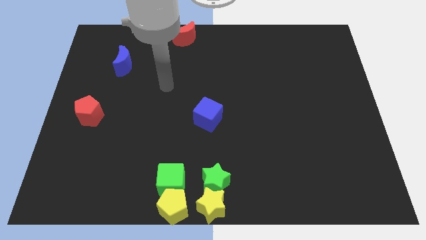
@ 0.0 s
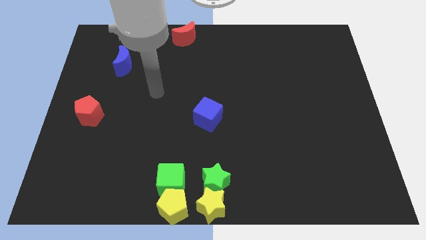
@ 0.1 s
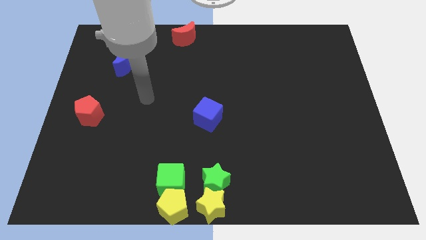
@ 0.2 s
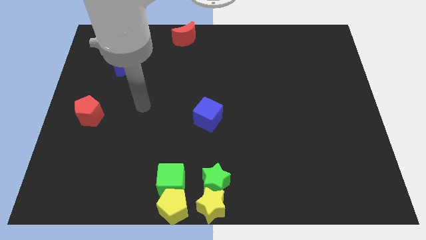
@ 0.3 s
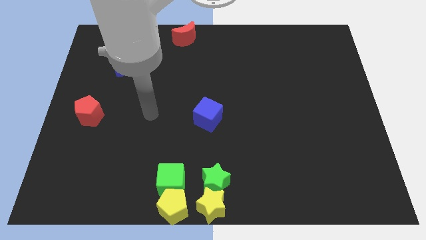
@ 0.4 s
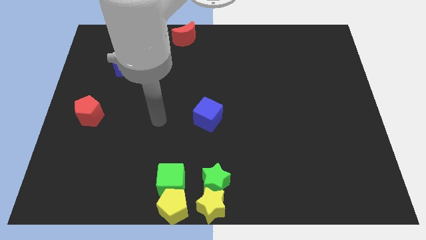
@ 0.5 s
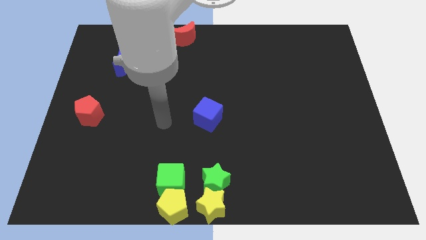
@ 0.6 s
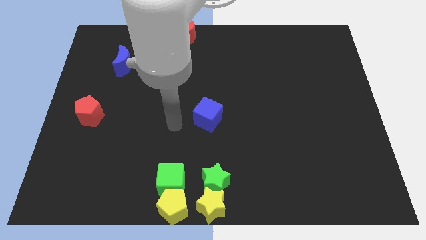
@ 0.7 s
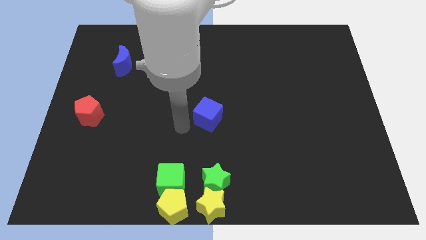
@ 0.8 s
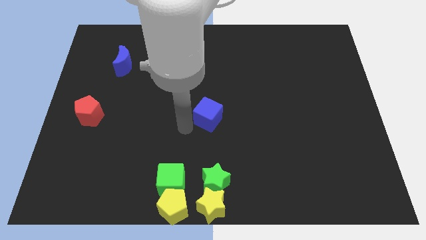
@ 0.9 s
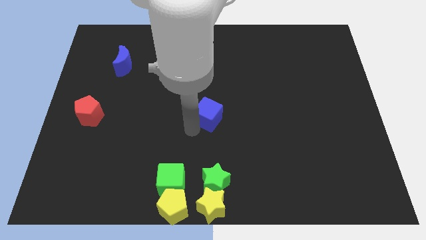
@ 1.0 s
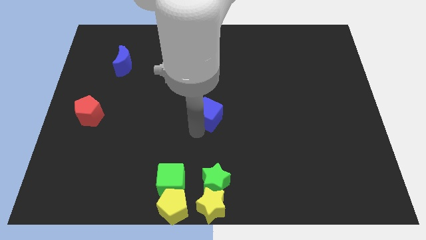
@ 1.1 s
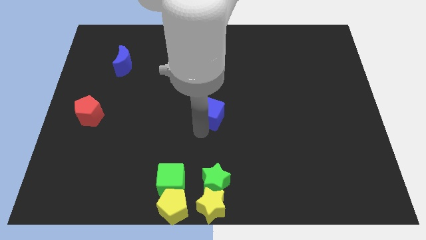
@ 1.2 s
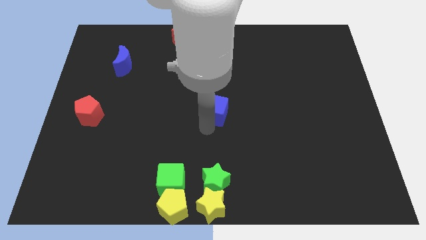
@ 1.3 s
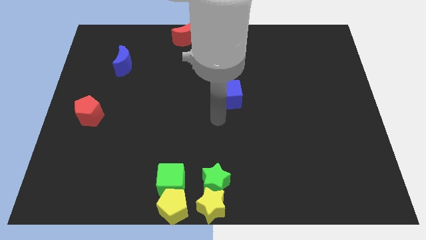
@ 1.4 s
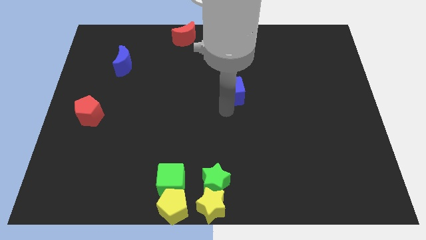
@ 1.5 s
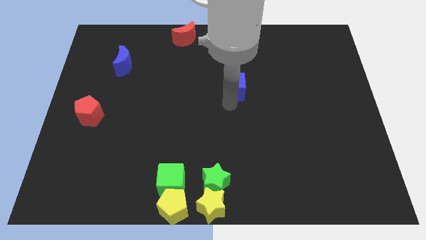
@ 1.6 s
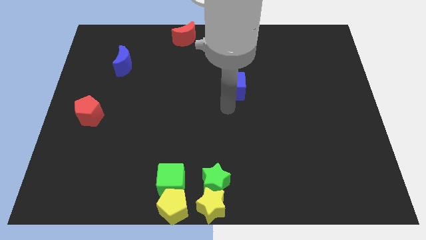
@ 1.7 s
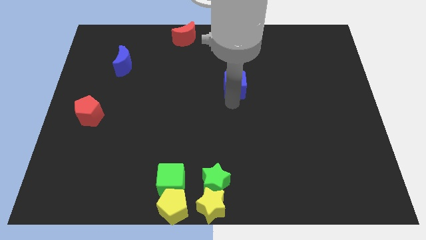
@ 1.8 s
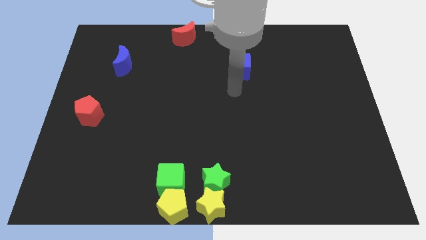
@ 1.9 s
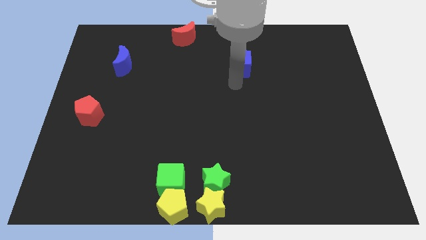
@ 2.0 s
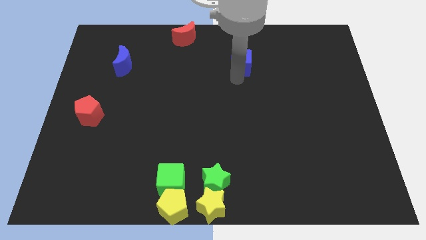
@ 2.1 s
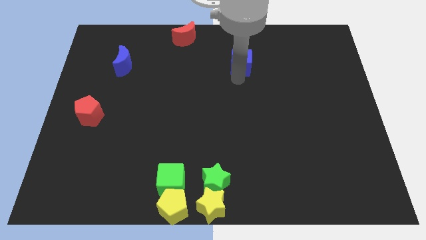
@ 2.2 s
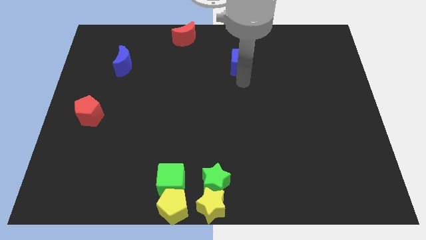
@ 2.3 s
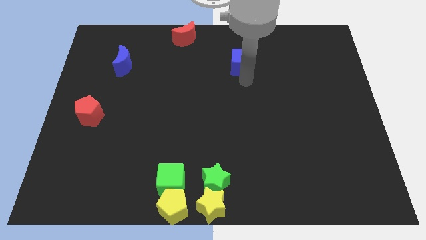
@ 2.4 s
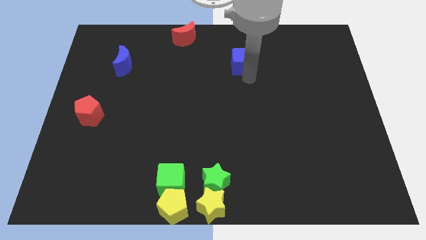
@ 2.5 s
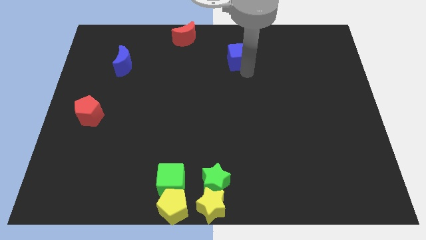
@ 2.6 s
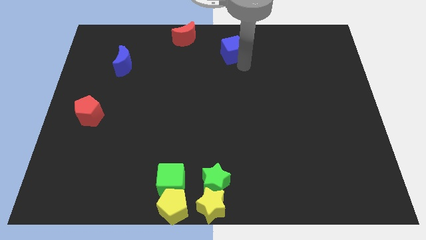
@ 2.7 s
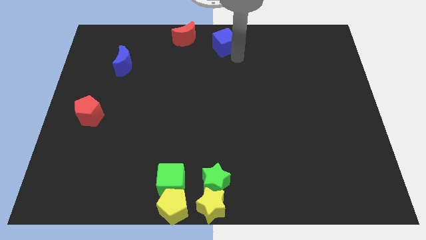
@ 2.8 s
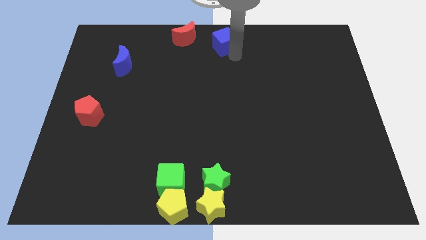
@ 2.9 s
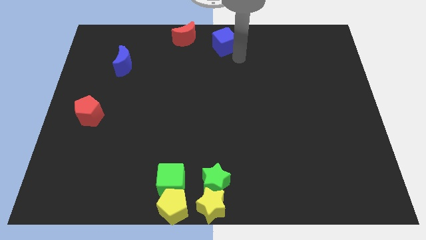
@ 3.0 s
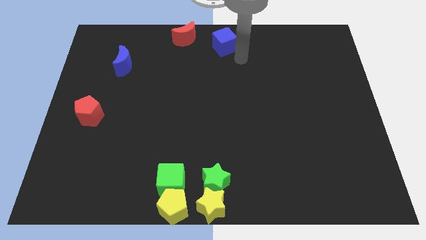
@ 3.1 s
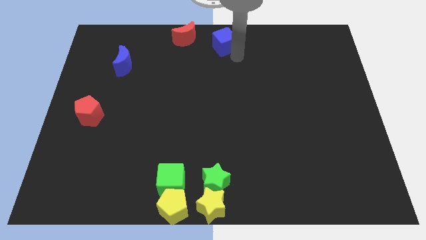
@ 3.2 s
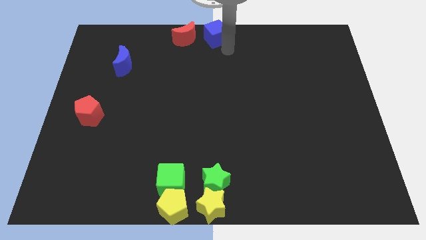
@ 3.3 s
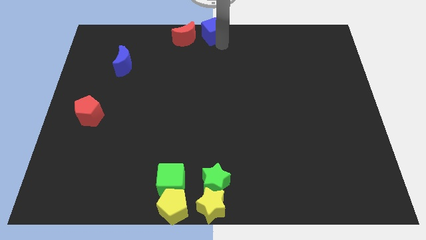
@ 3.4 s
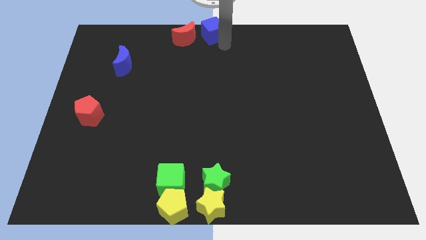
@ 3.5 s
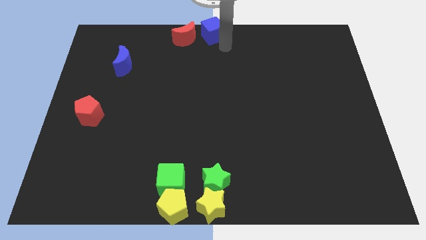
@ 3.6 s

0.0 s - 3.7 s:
move blue cube to the right of red moon

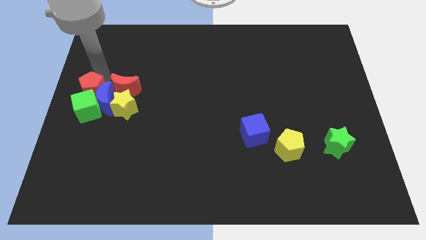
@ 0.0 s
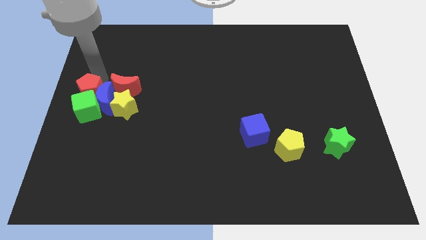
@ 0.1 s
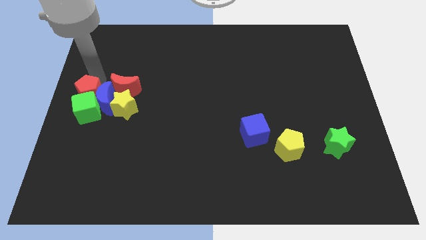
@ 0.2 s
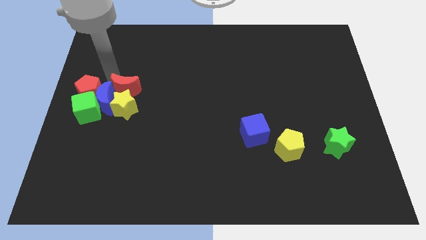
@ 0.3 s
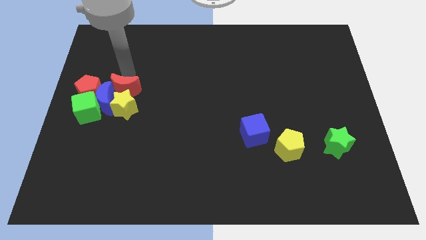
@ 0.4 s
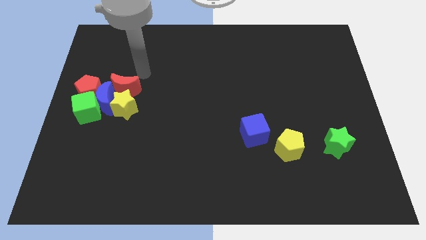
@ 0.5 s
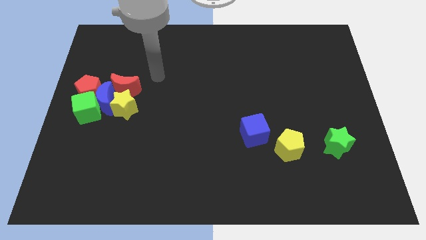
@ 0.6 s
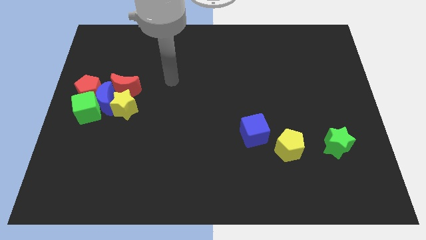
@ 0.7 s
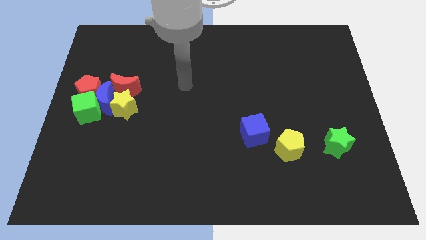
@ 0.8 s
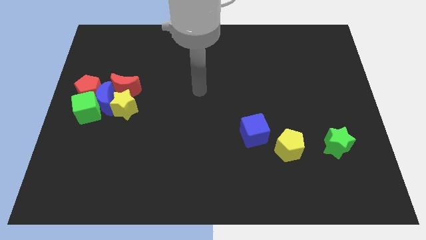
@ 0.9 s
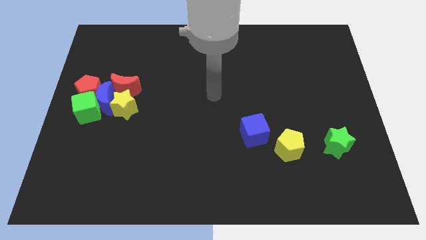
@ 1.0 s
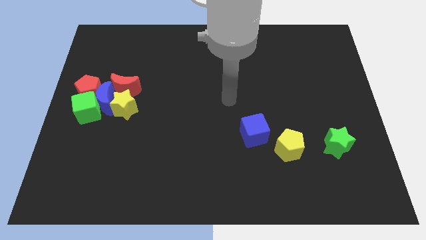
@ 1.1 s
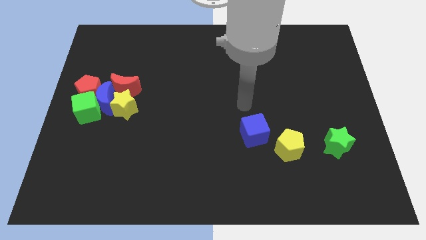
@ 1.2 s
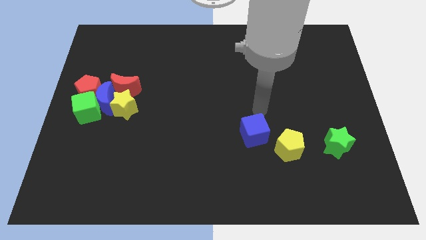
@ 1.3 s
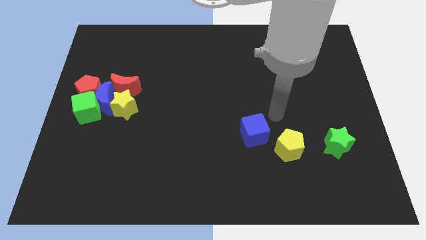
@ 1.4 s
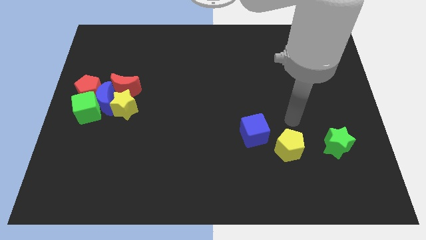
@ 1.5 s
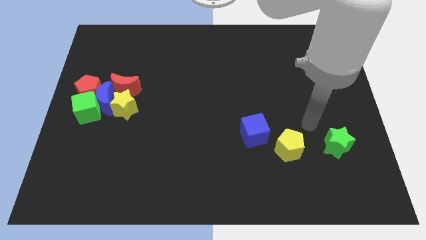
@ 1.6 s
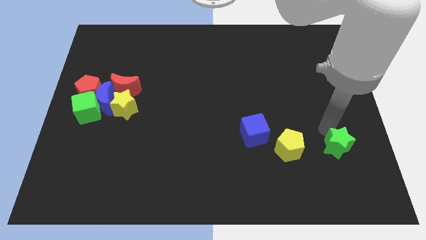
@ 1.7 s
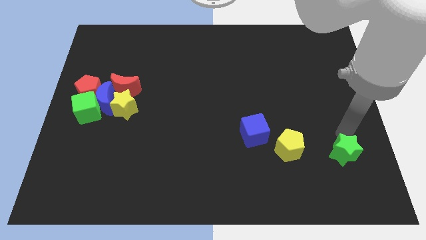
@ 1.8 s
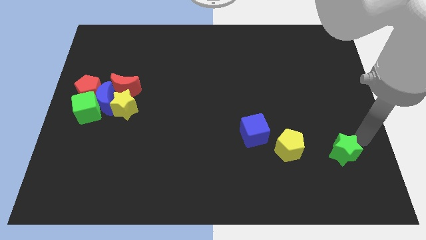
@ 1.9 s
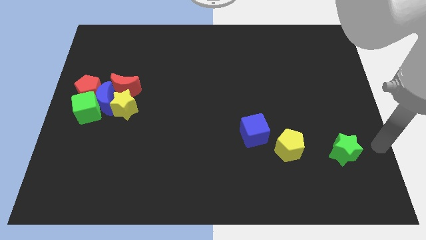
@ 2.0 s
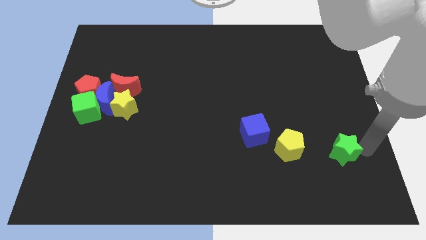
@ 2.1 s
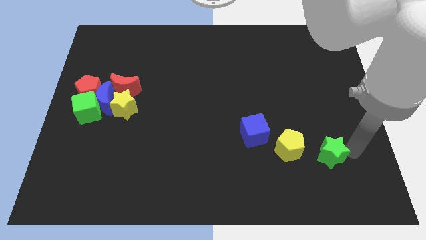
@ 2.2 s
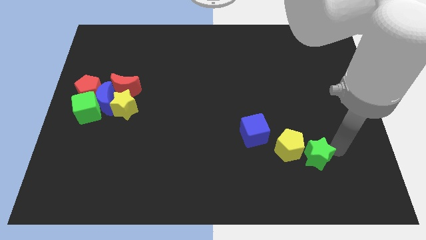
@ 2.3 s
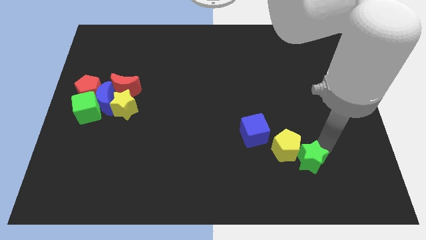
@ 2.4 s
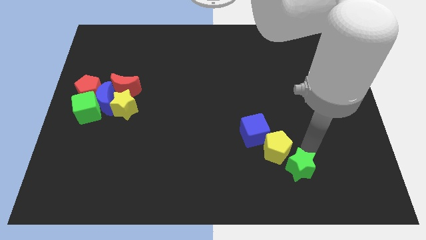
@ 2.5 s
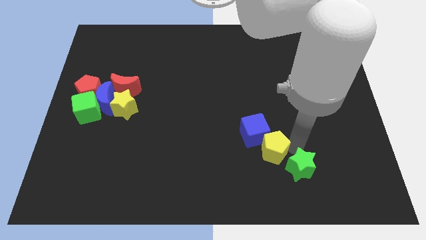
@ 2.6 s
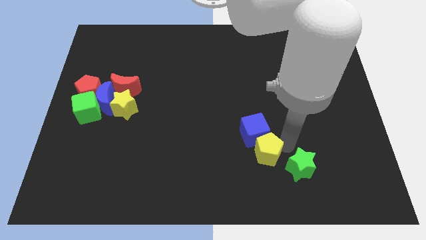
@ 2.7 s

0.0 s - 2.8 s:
move your arm away form red crescent

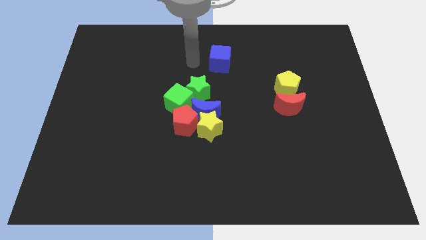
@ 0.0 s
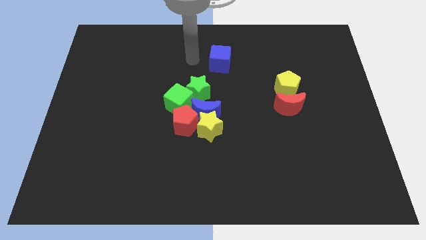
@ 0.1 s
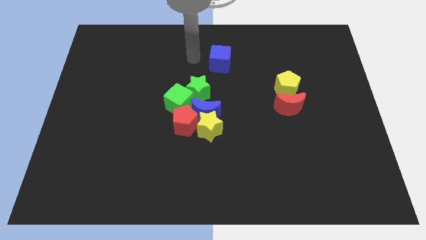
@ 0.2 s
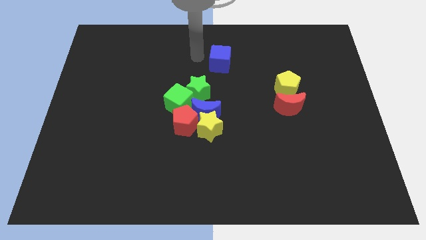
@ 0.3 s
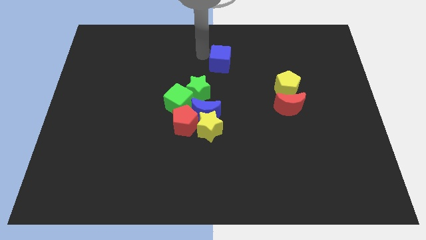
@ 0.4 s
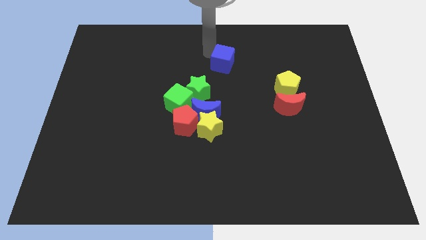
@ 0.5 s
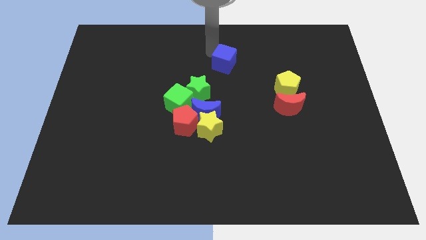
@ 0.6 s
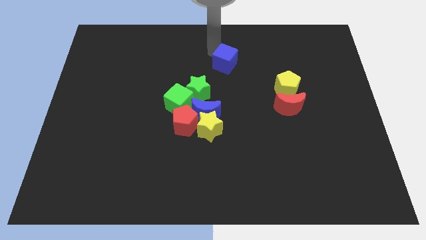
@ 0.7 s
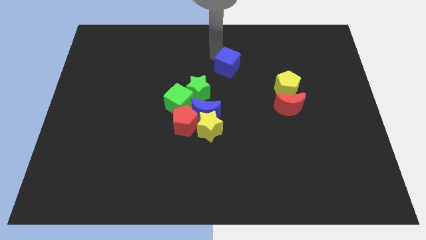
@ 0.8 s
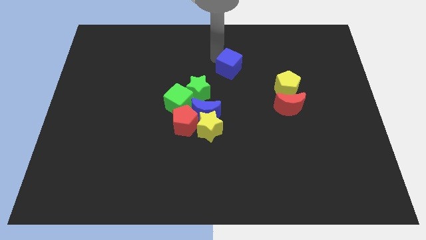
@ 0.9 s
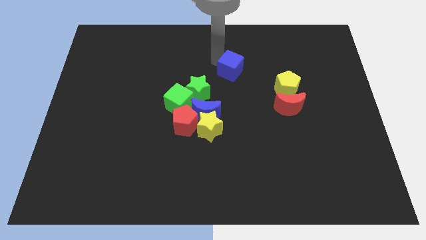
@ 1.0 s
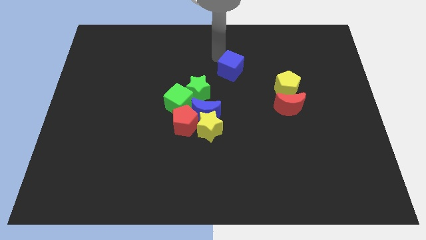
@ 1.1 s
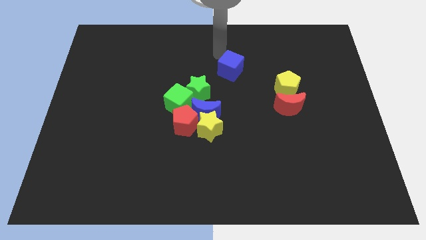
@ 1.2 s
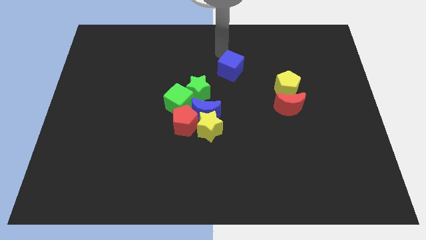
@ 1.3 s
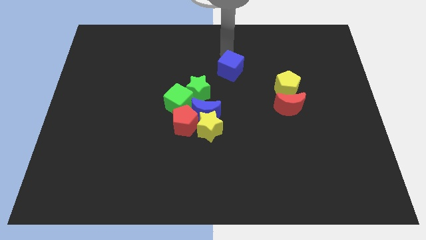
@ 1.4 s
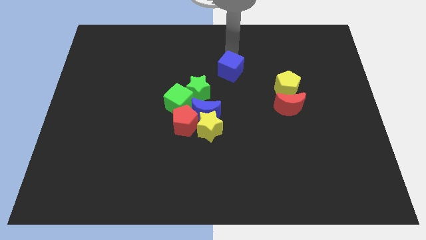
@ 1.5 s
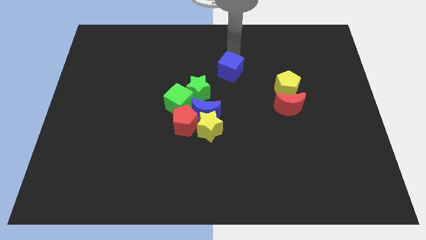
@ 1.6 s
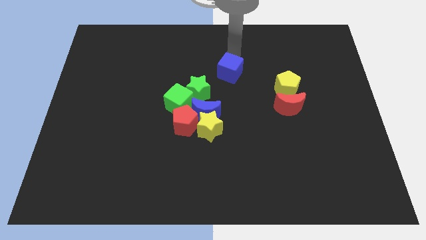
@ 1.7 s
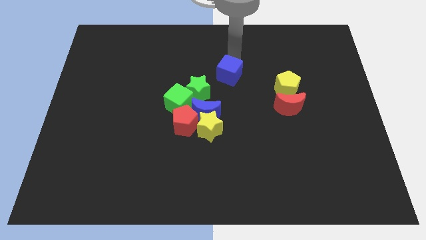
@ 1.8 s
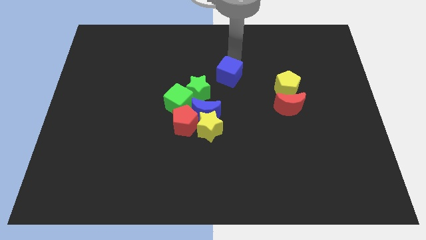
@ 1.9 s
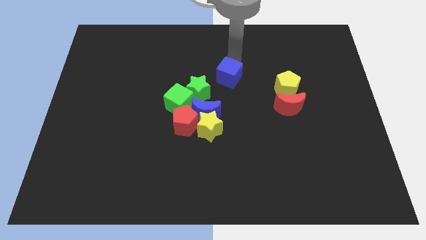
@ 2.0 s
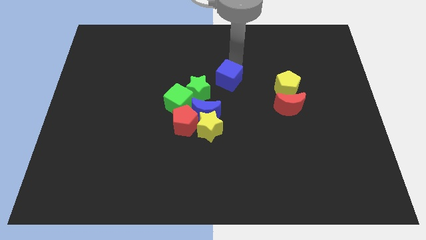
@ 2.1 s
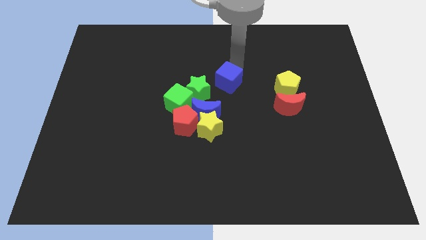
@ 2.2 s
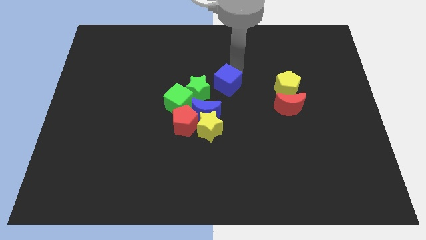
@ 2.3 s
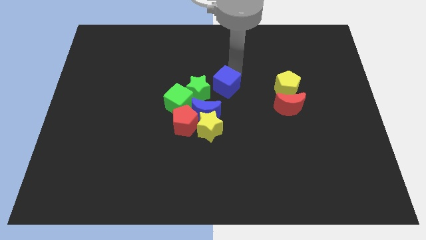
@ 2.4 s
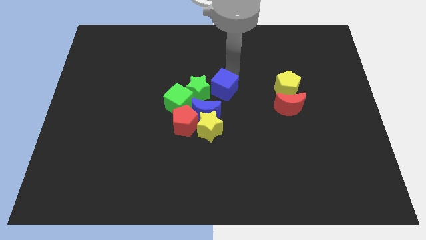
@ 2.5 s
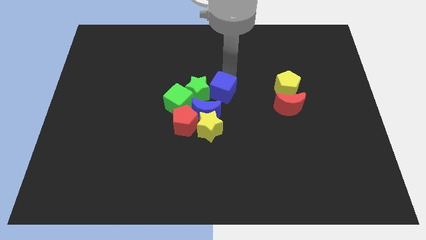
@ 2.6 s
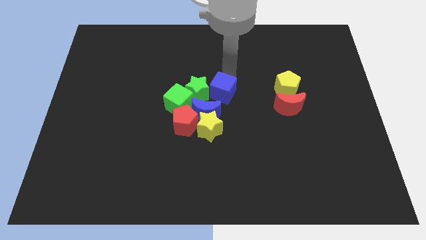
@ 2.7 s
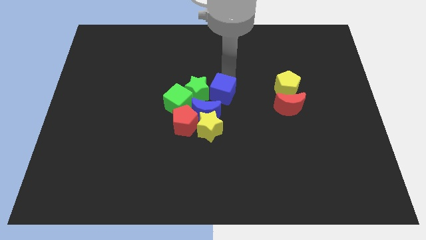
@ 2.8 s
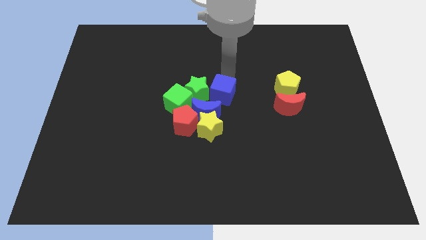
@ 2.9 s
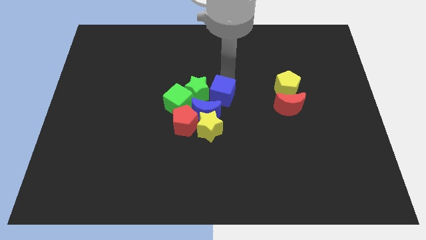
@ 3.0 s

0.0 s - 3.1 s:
push the blue cube to the right of the green star
